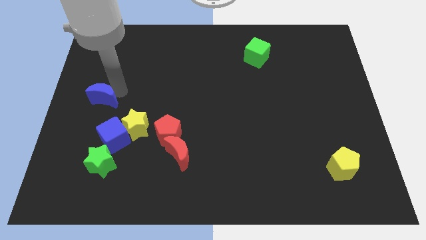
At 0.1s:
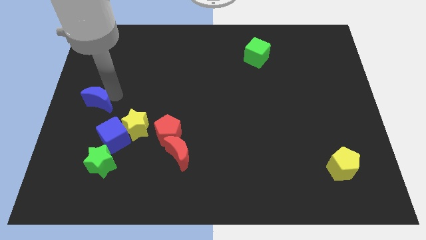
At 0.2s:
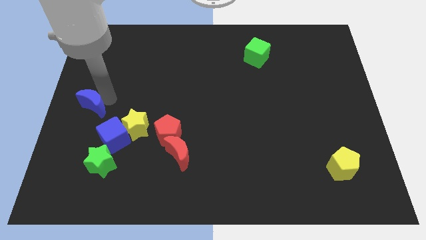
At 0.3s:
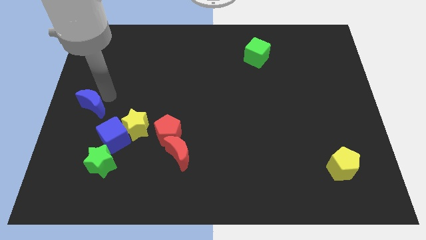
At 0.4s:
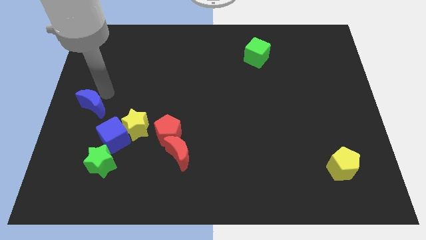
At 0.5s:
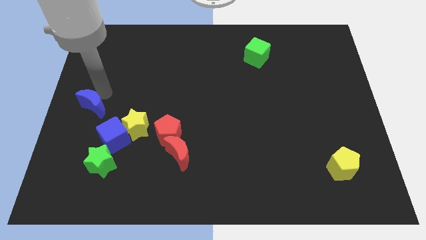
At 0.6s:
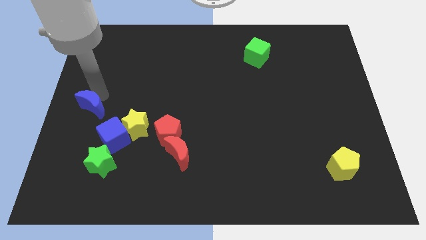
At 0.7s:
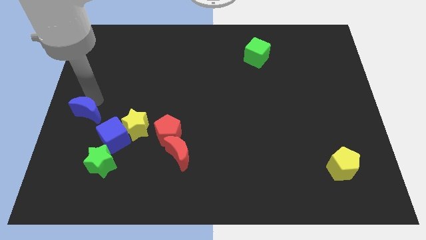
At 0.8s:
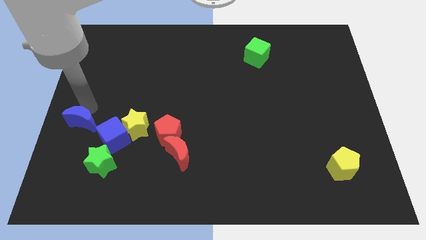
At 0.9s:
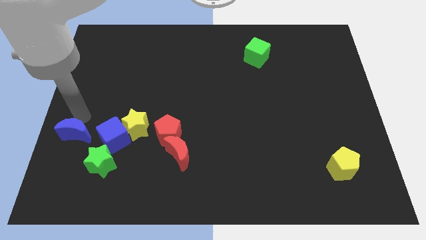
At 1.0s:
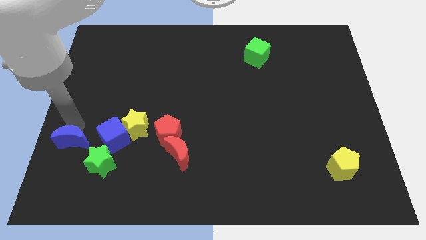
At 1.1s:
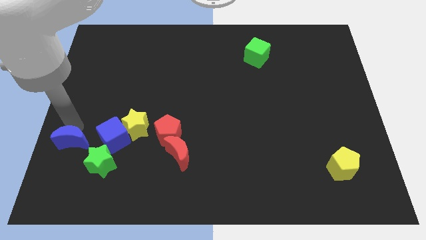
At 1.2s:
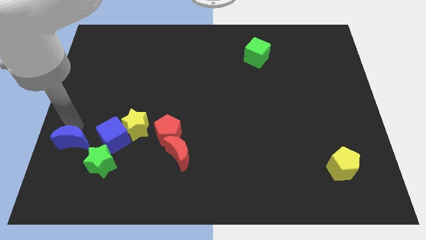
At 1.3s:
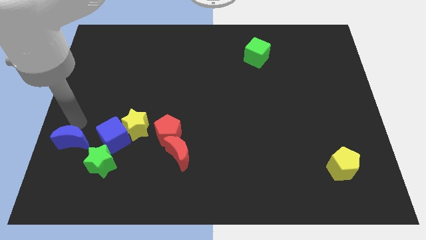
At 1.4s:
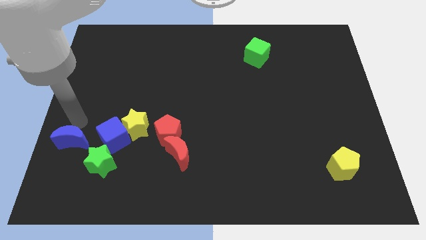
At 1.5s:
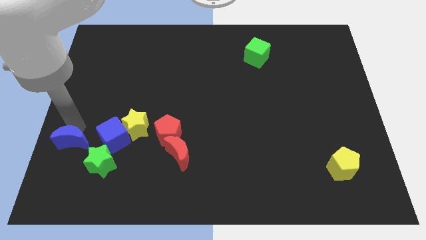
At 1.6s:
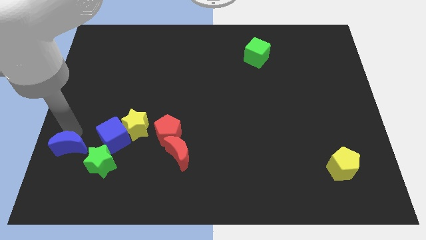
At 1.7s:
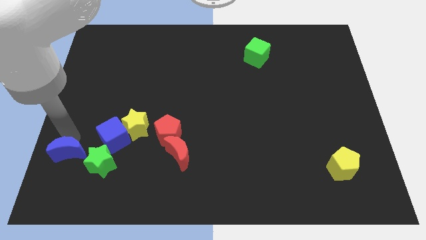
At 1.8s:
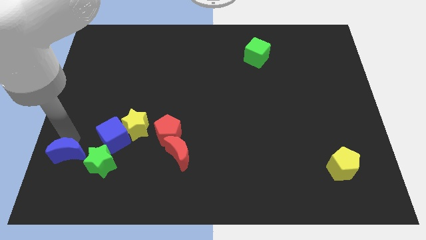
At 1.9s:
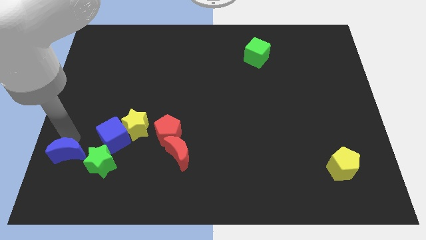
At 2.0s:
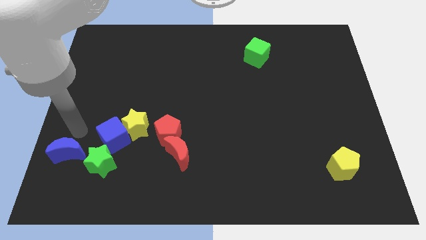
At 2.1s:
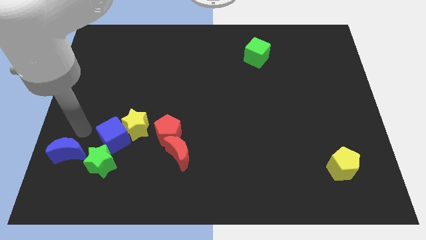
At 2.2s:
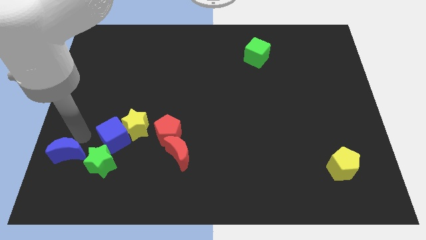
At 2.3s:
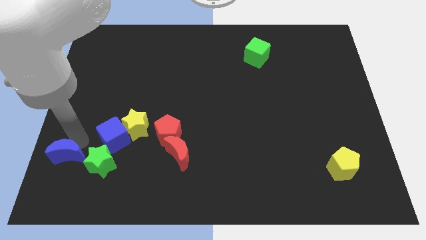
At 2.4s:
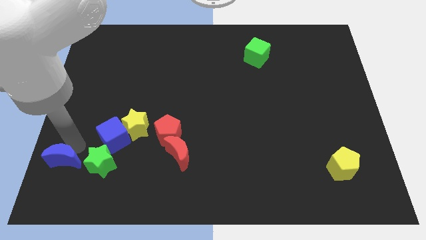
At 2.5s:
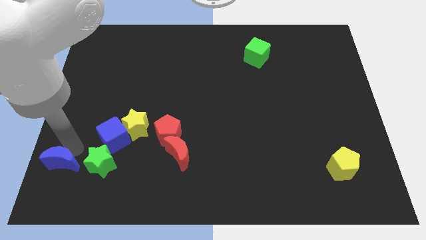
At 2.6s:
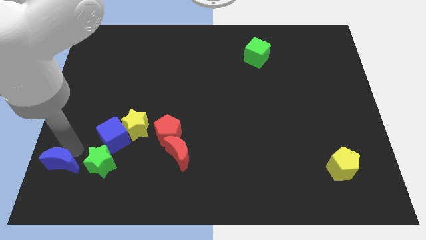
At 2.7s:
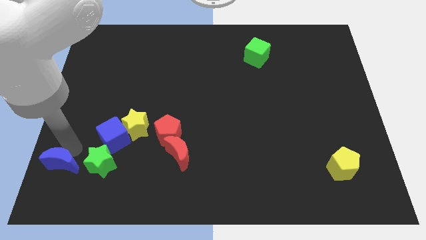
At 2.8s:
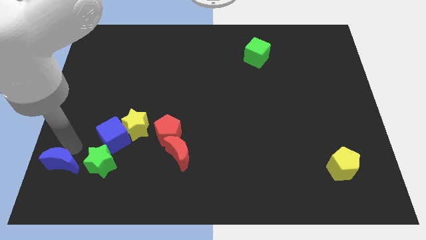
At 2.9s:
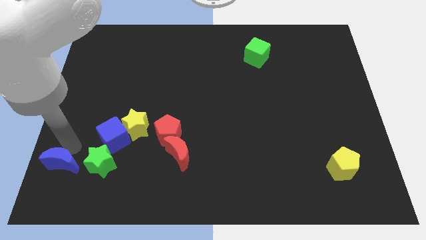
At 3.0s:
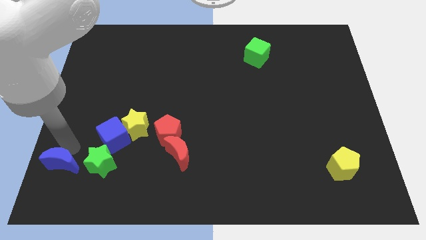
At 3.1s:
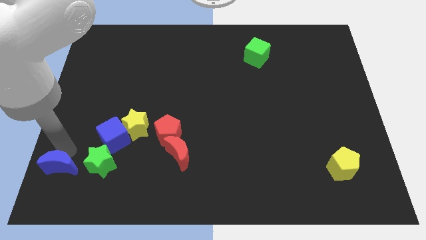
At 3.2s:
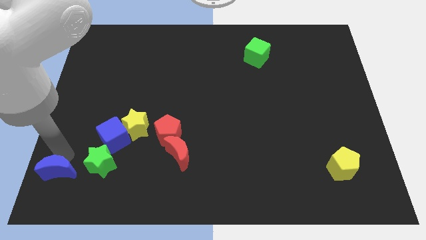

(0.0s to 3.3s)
place the blue moon diagonal to the left side of the green star

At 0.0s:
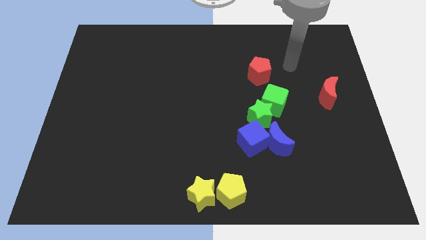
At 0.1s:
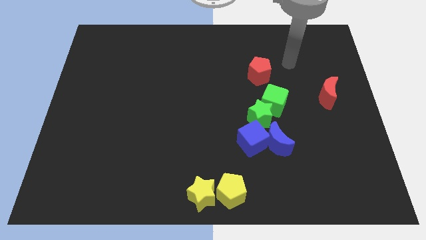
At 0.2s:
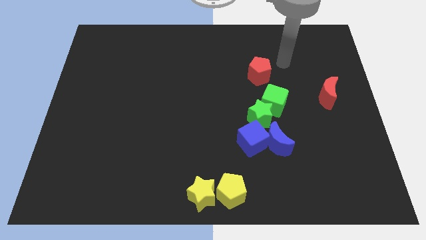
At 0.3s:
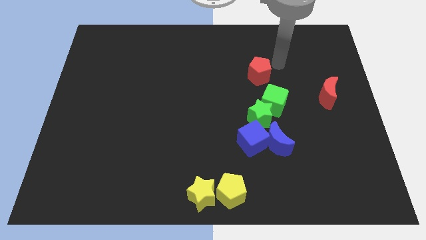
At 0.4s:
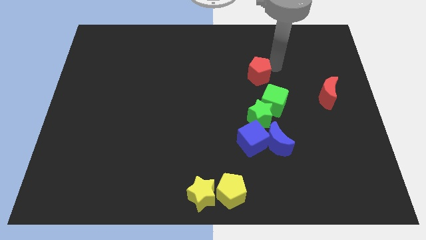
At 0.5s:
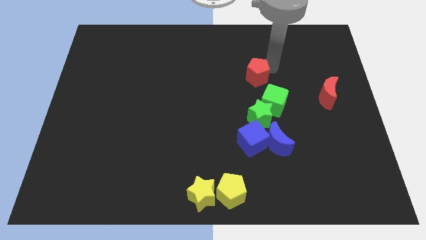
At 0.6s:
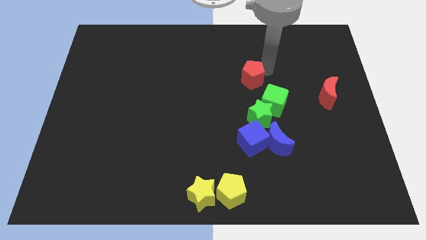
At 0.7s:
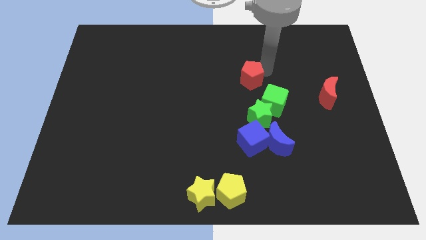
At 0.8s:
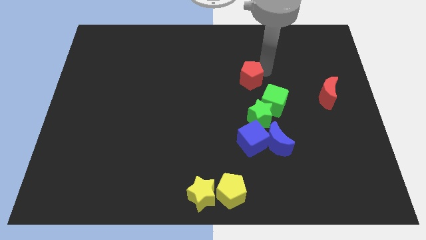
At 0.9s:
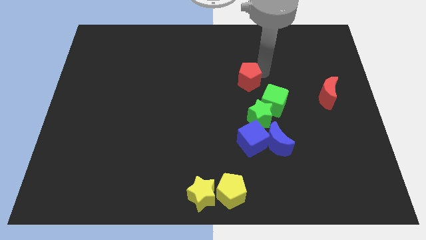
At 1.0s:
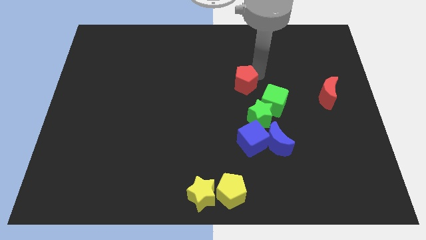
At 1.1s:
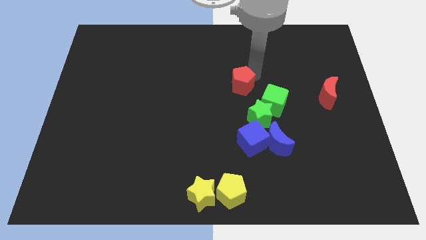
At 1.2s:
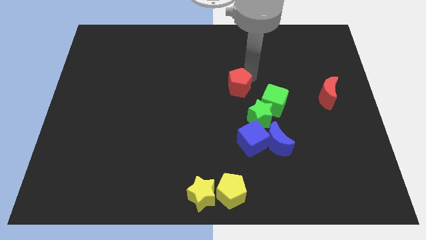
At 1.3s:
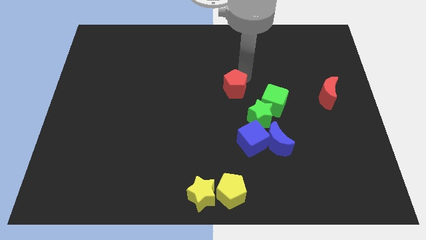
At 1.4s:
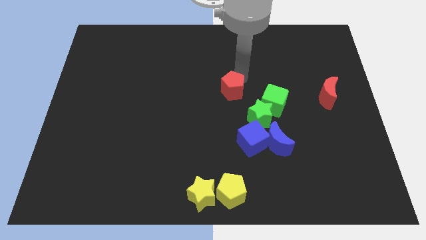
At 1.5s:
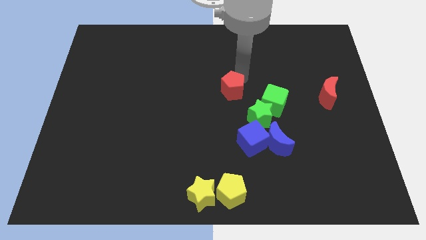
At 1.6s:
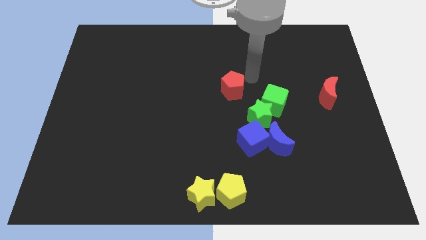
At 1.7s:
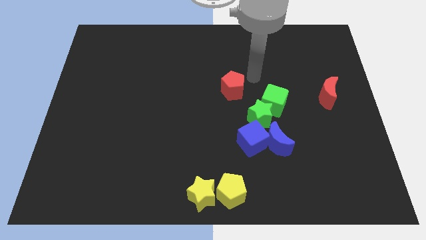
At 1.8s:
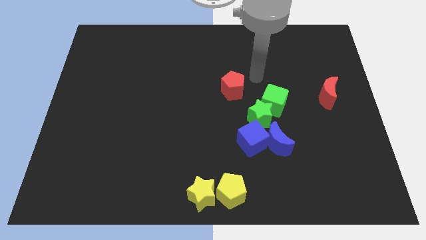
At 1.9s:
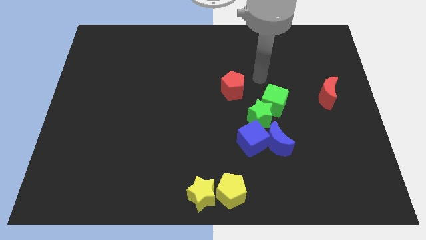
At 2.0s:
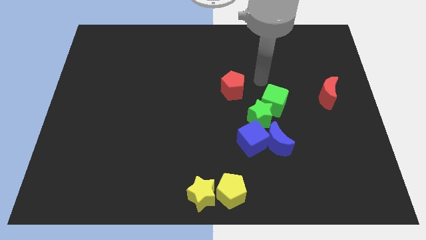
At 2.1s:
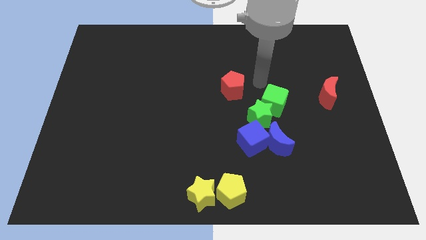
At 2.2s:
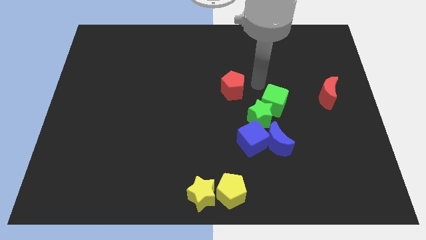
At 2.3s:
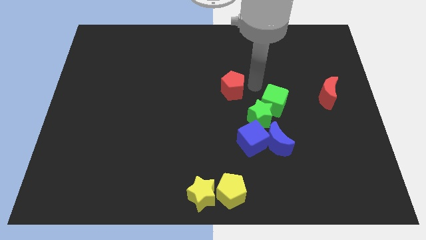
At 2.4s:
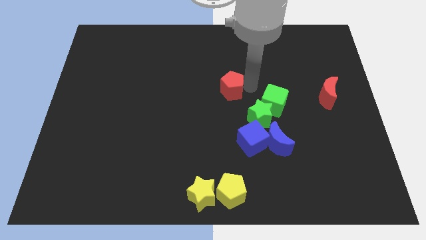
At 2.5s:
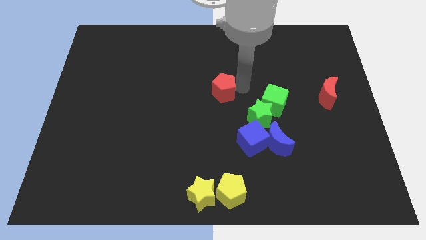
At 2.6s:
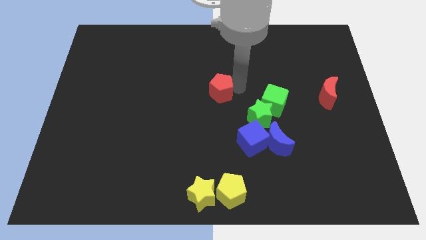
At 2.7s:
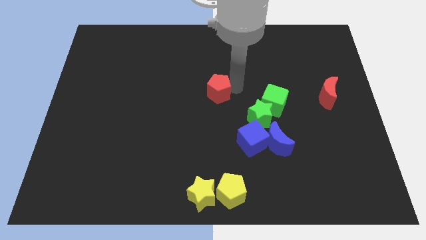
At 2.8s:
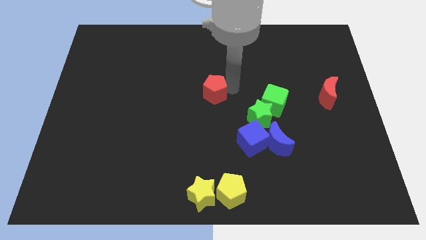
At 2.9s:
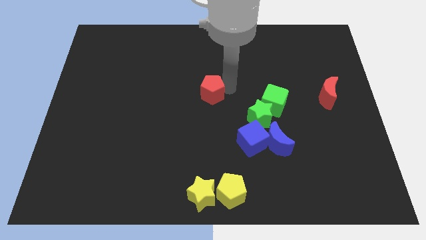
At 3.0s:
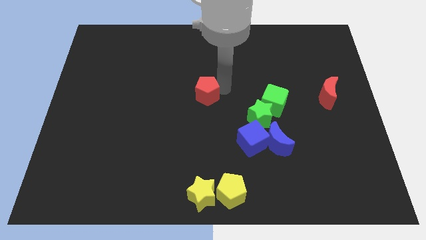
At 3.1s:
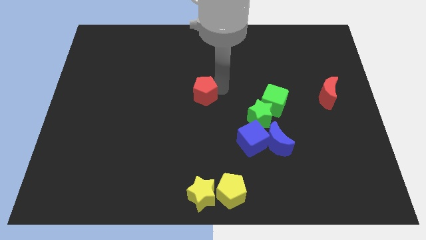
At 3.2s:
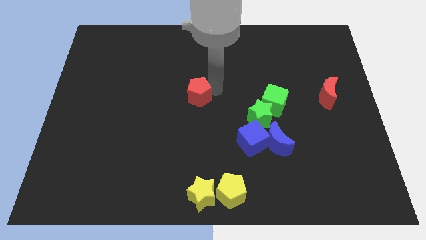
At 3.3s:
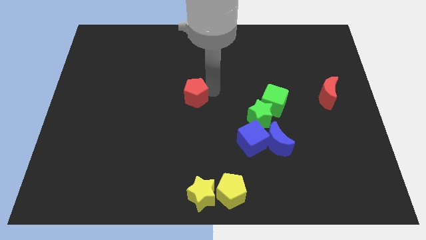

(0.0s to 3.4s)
place the red pentagon vertically above the yellow star

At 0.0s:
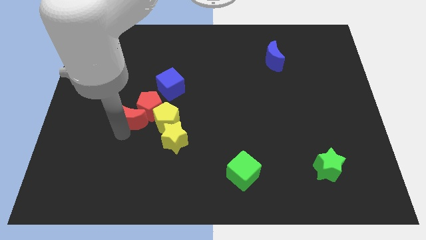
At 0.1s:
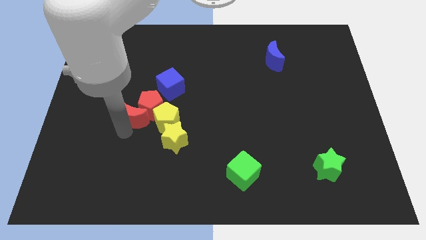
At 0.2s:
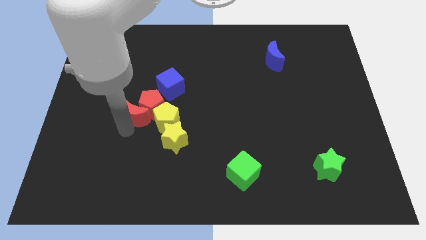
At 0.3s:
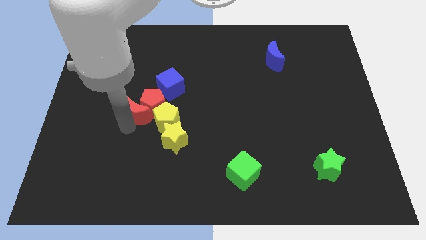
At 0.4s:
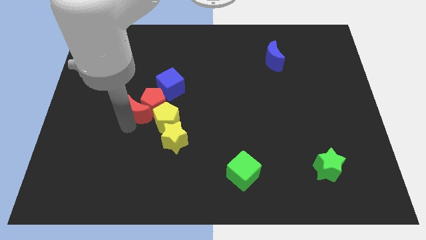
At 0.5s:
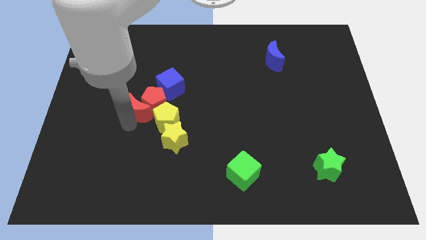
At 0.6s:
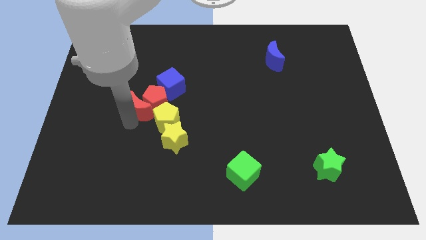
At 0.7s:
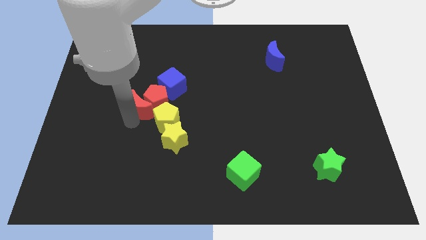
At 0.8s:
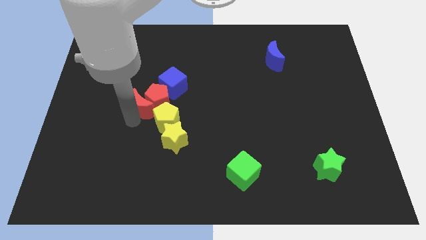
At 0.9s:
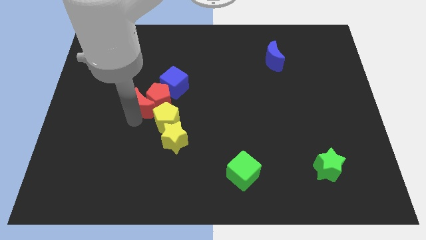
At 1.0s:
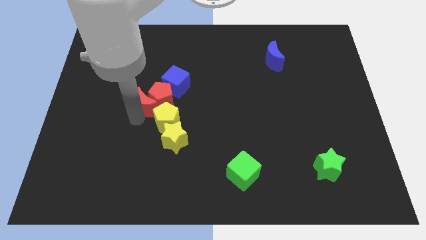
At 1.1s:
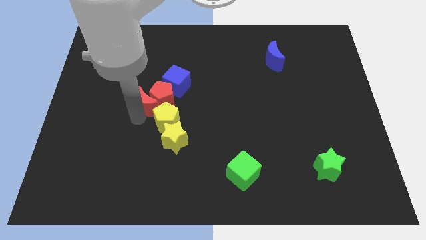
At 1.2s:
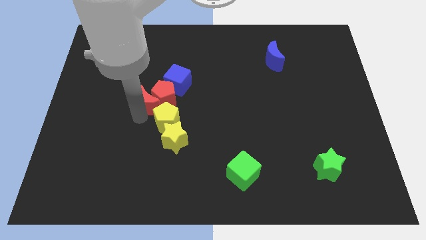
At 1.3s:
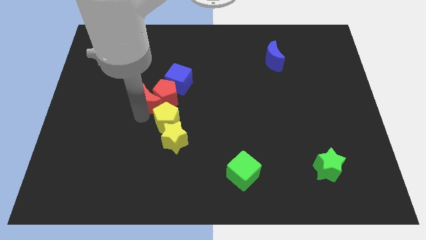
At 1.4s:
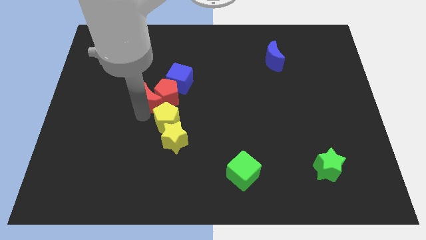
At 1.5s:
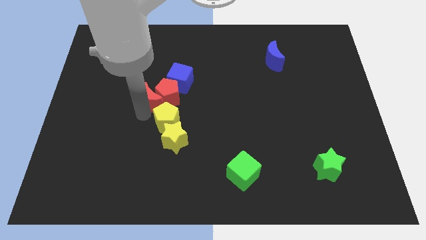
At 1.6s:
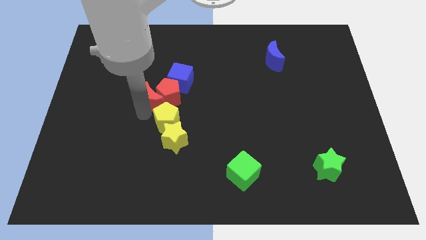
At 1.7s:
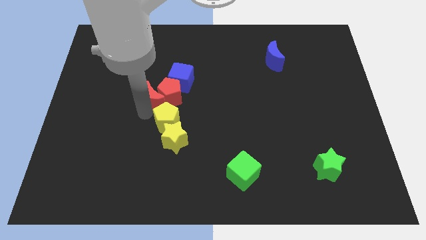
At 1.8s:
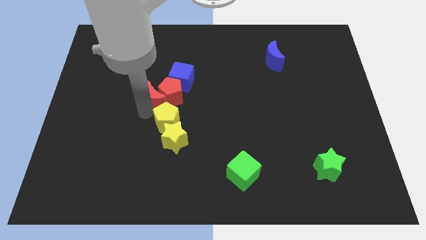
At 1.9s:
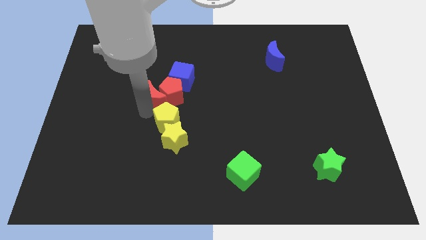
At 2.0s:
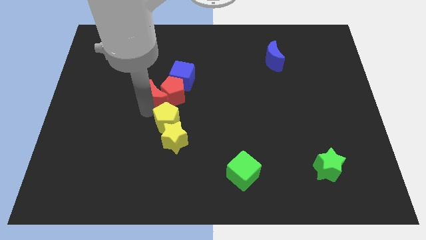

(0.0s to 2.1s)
push the red crescent into the red pentagon
